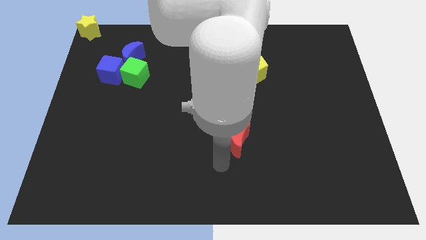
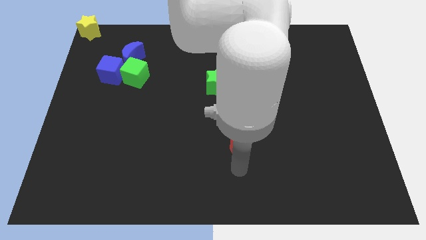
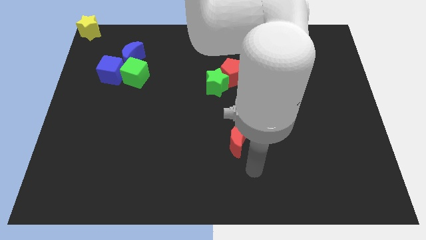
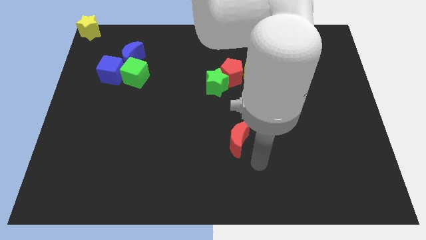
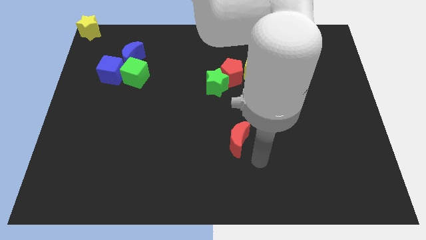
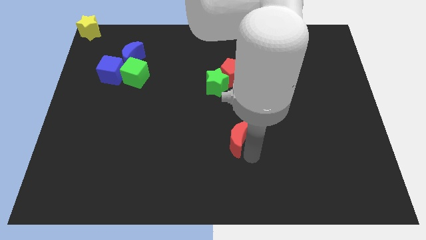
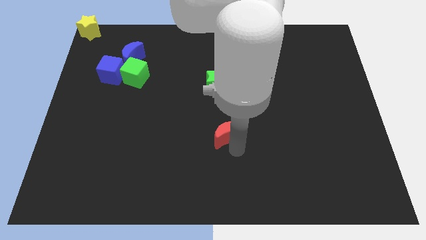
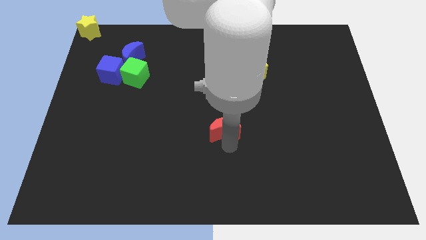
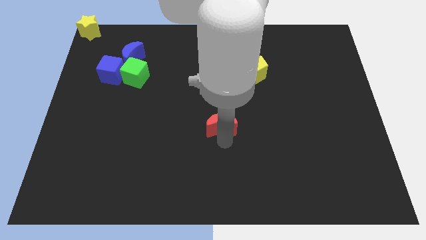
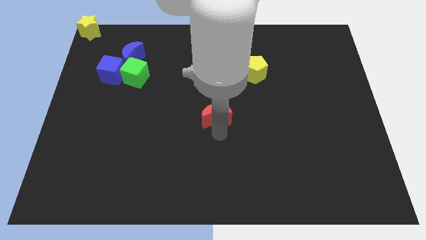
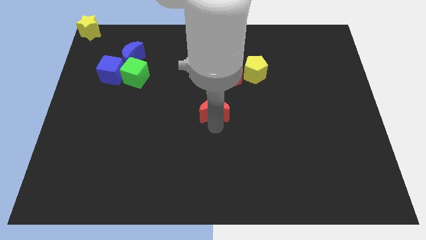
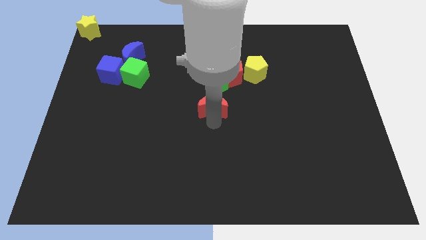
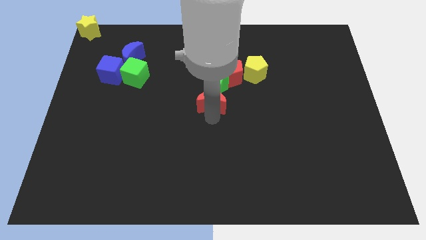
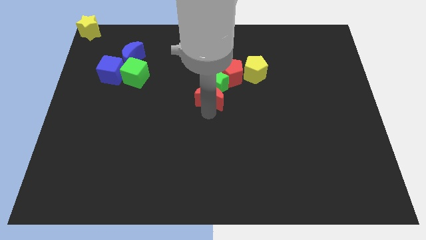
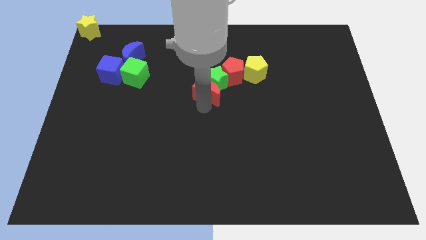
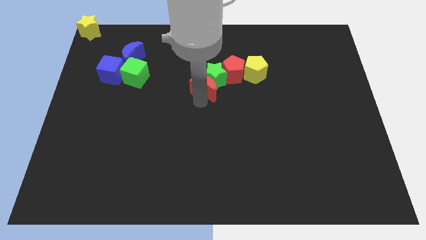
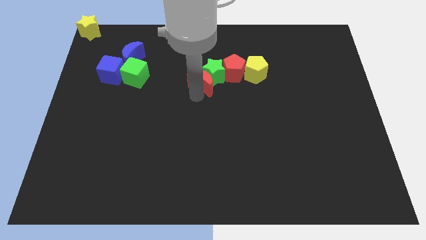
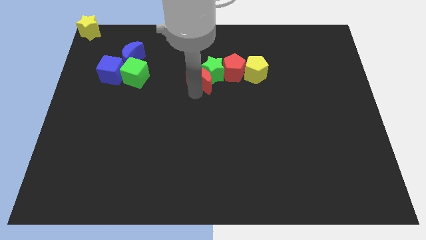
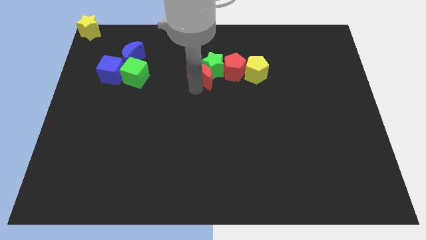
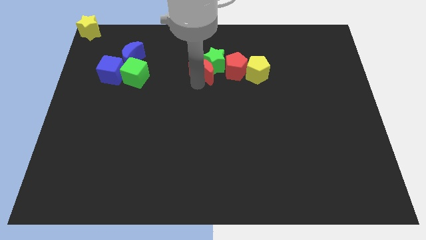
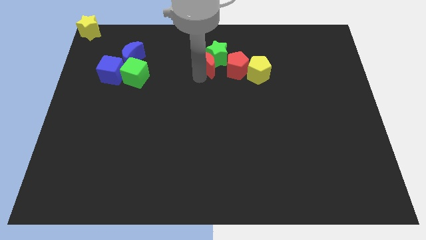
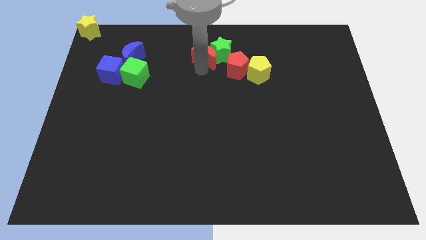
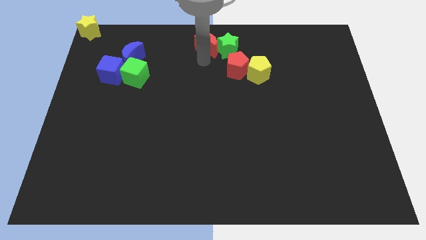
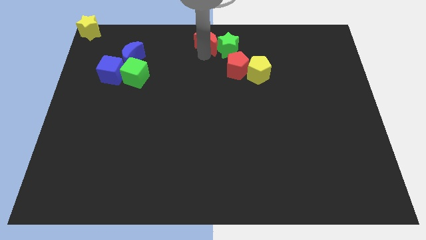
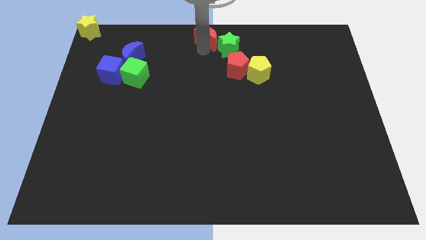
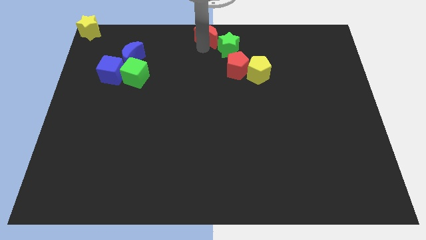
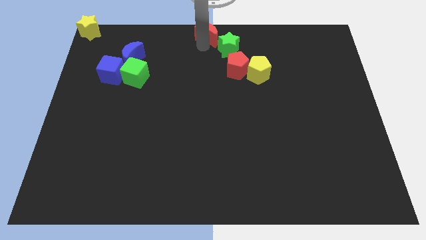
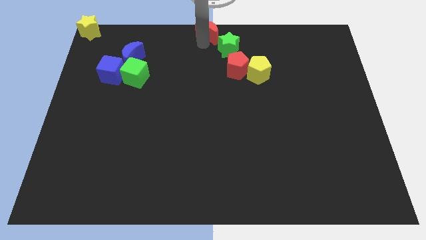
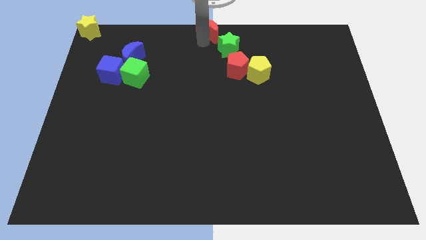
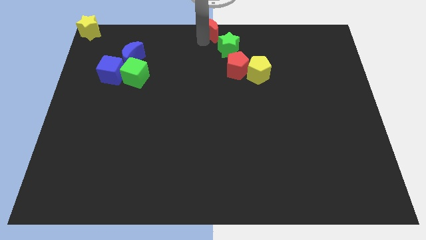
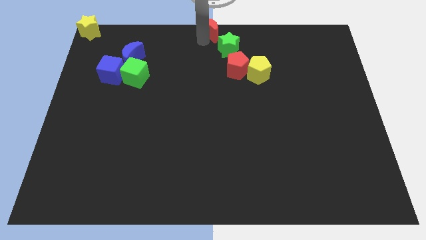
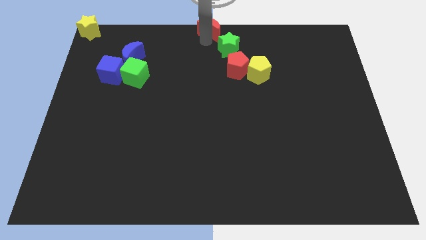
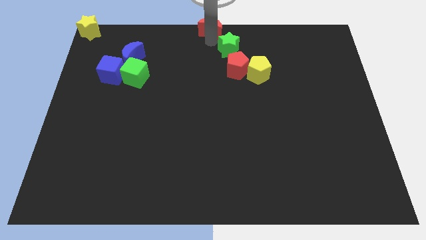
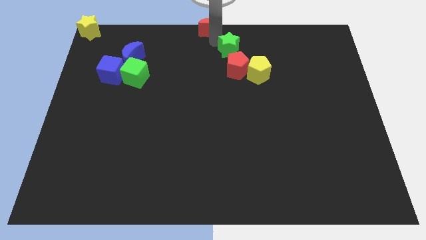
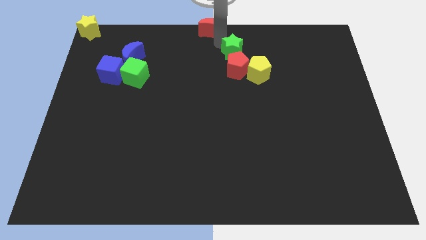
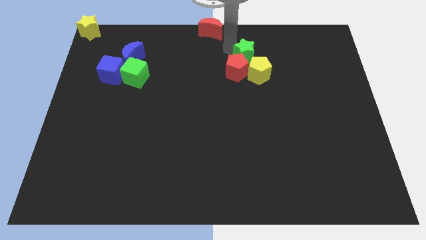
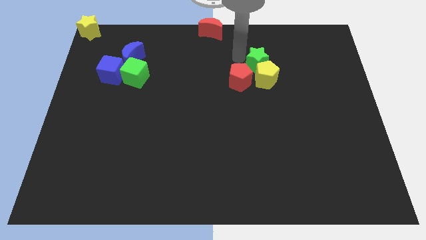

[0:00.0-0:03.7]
place the arm to the top middle of the board

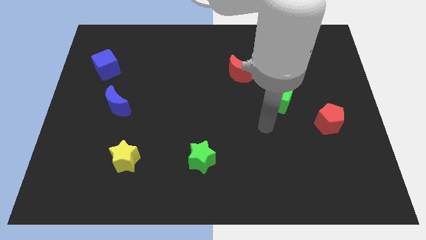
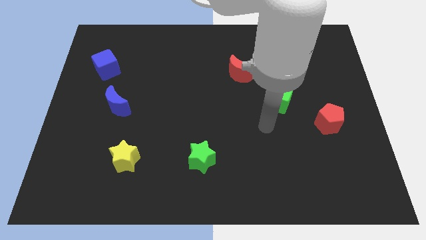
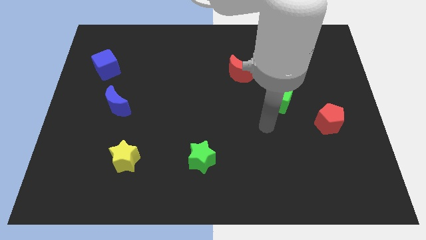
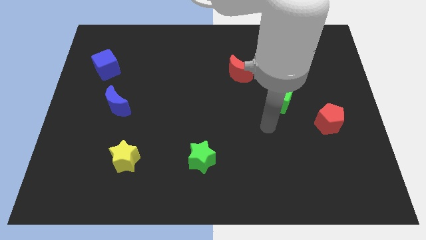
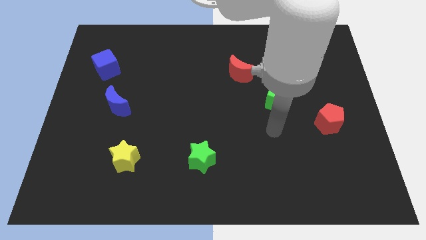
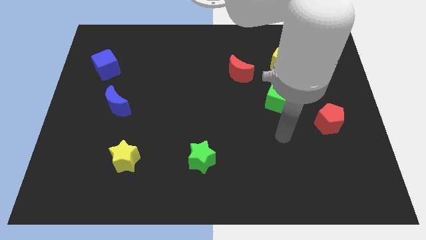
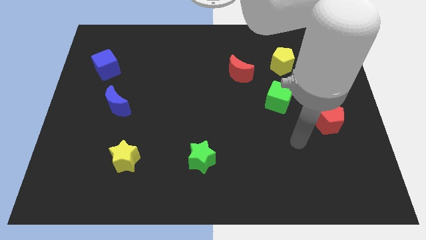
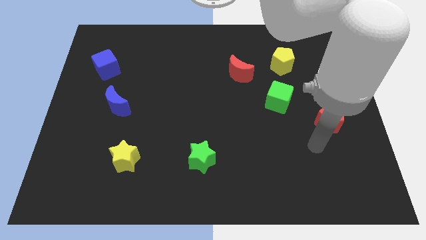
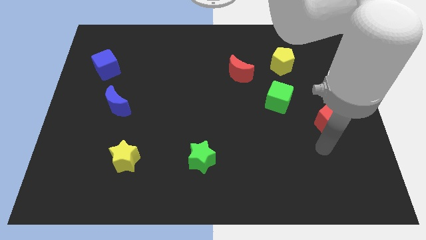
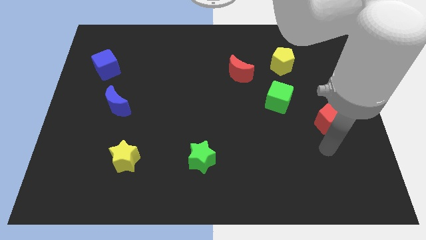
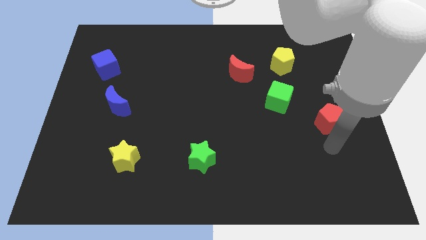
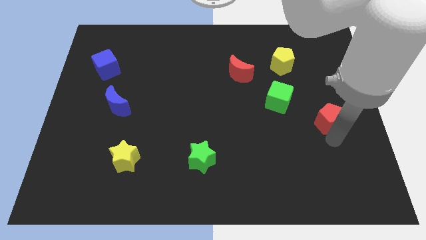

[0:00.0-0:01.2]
move your arm below to the red pentagon

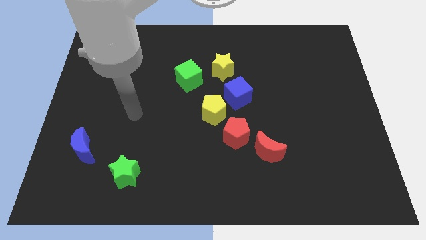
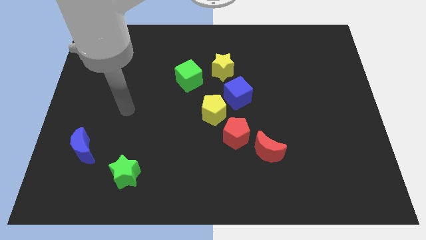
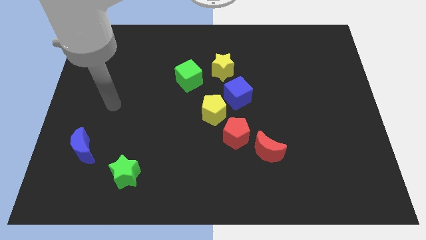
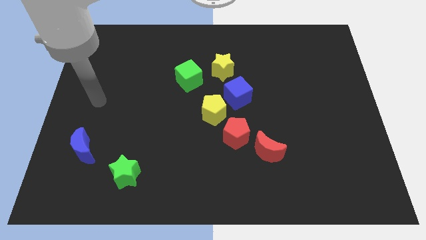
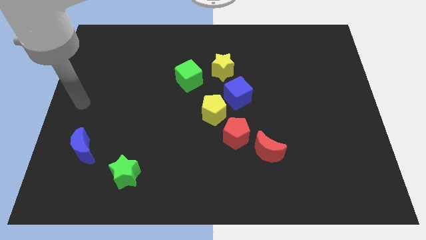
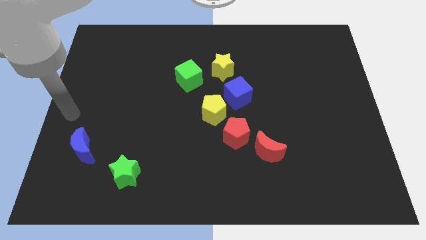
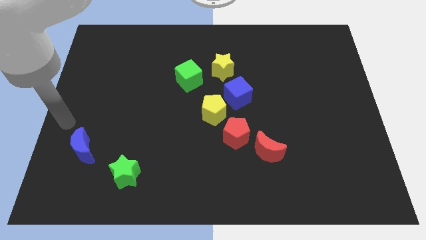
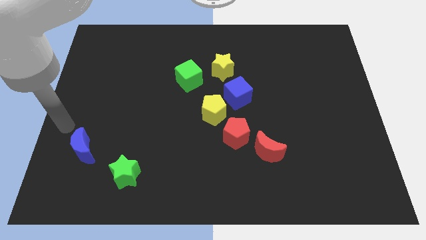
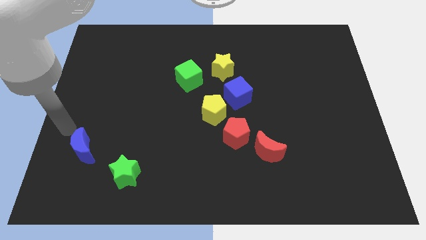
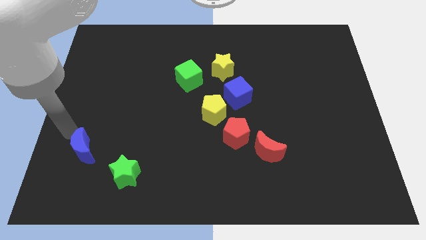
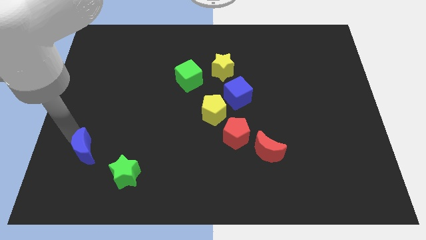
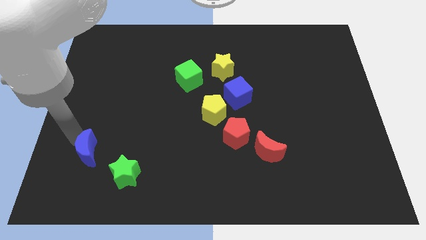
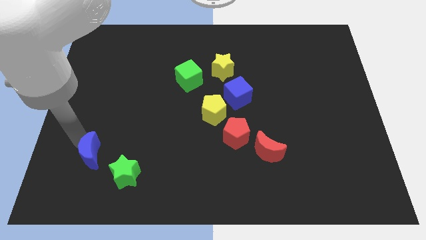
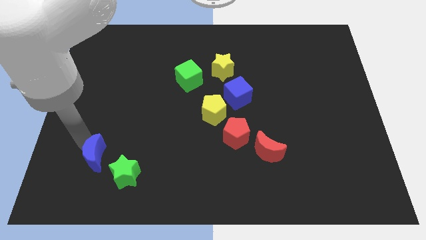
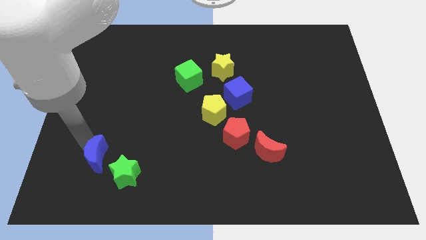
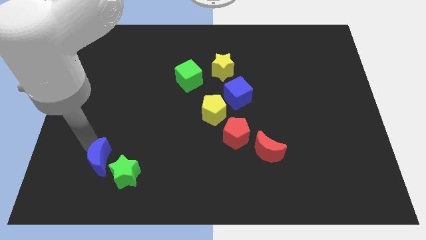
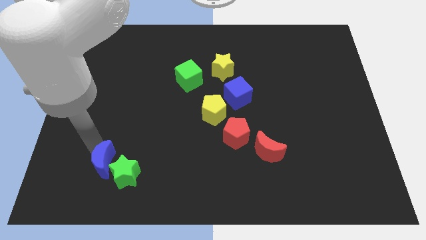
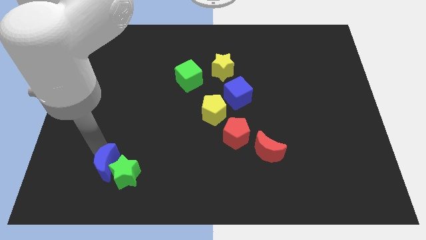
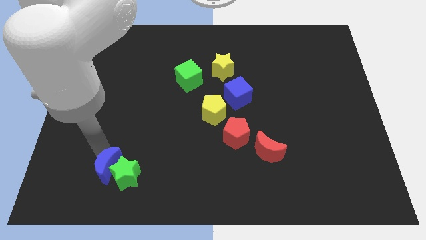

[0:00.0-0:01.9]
attach the blue moon to the green star

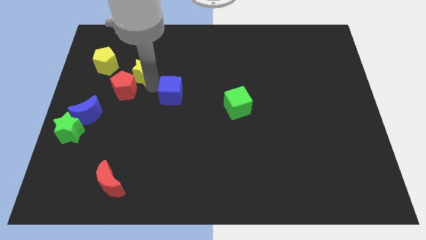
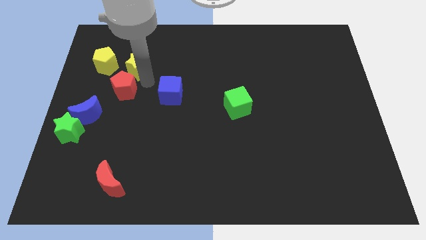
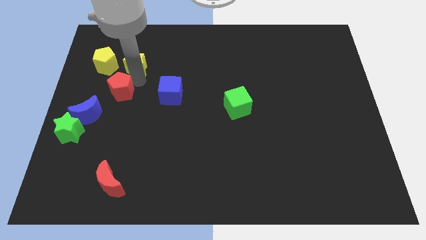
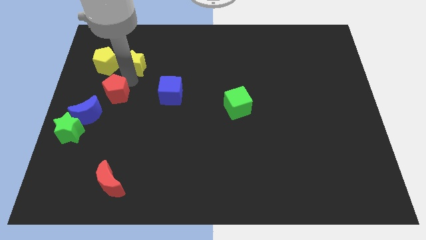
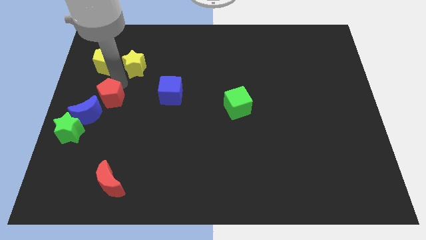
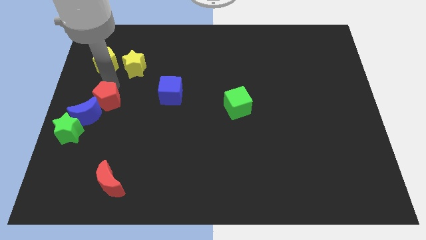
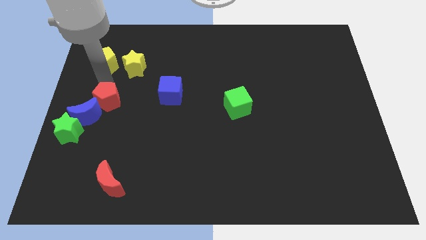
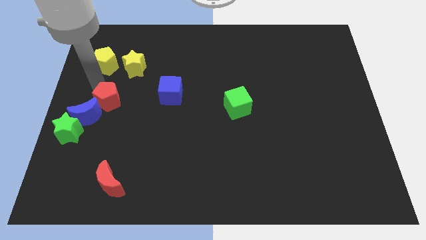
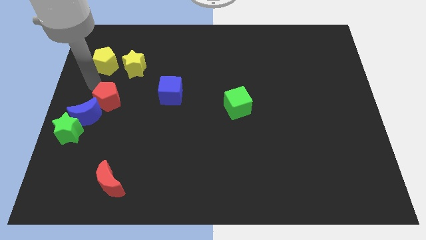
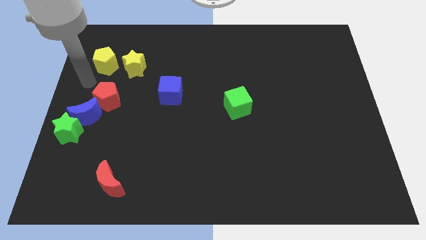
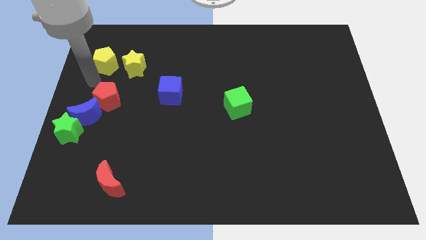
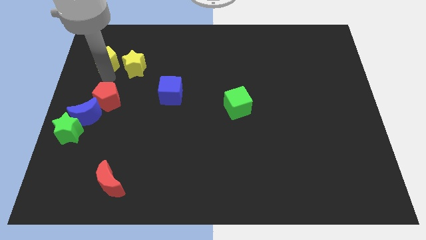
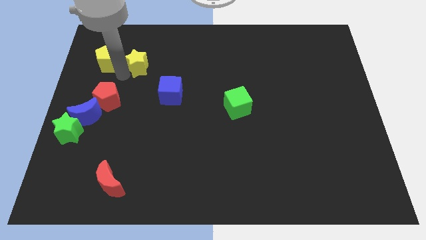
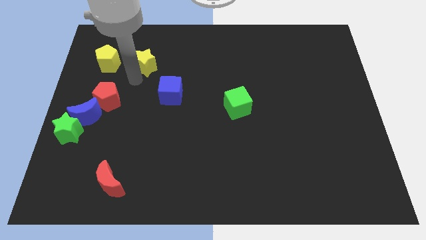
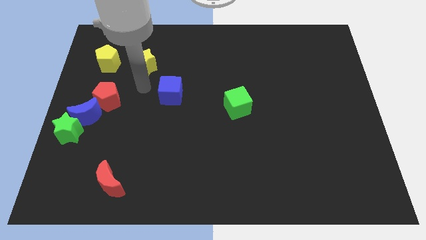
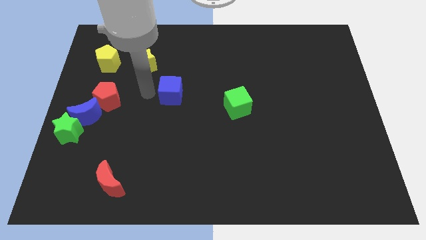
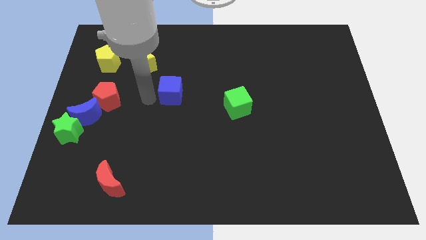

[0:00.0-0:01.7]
separate the red pentagon and the yellow blocks

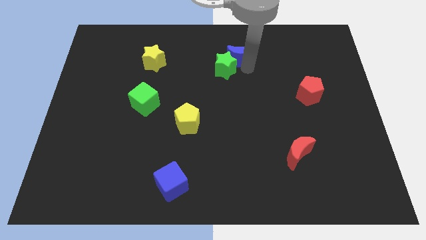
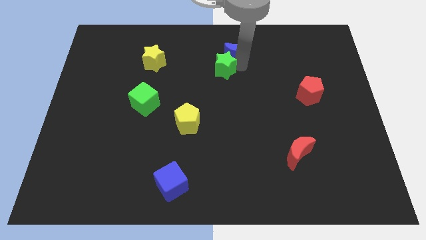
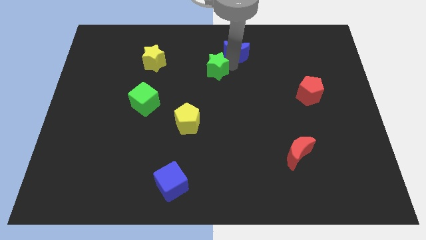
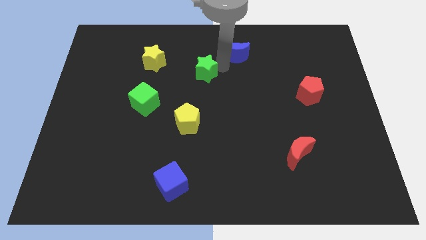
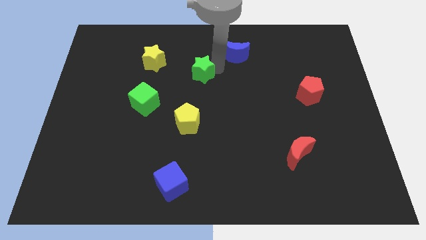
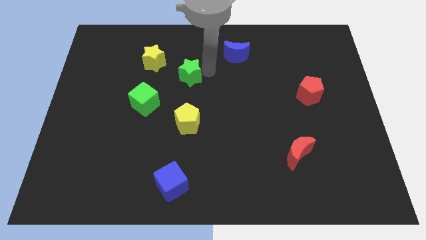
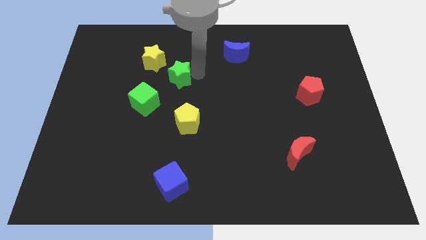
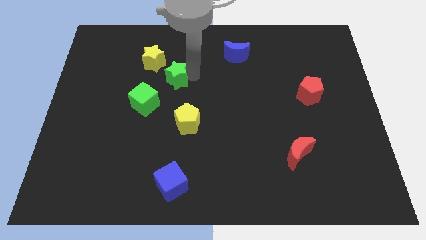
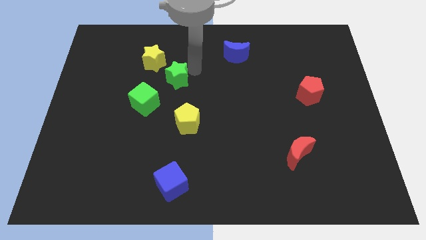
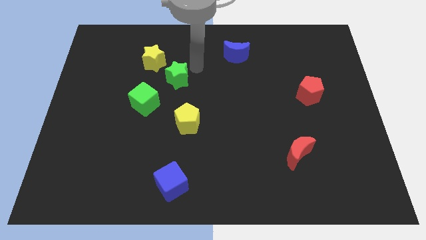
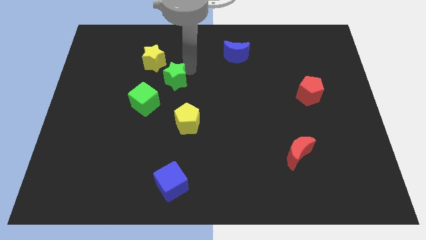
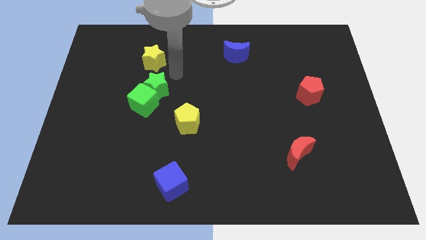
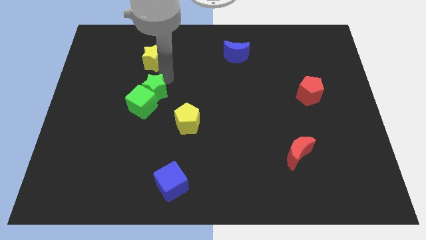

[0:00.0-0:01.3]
push the green star into green cube
